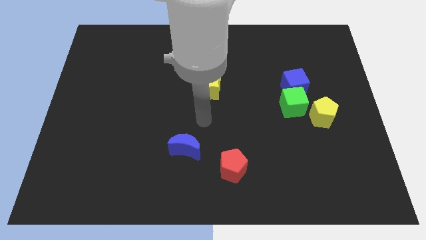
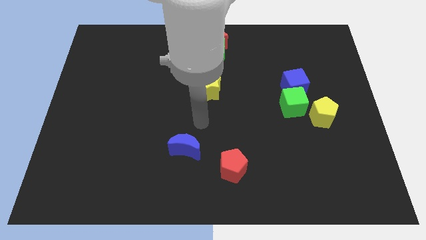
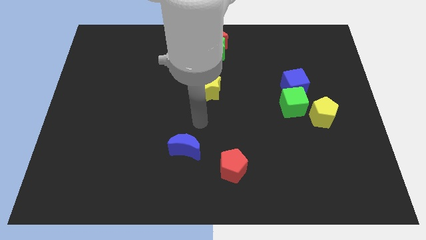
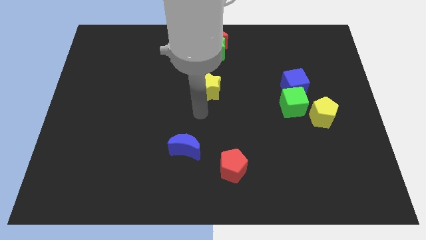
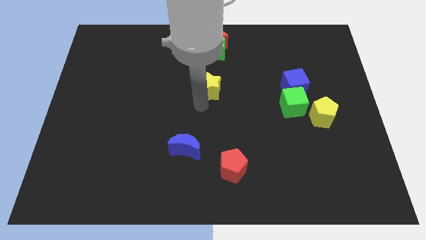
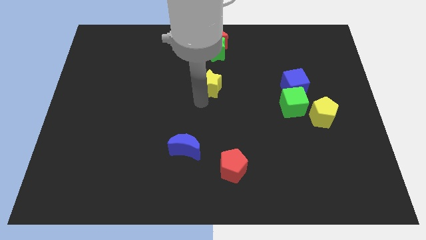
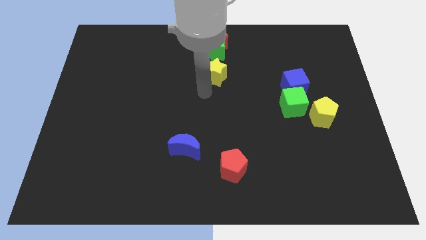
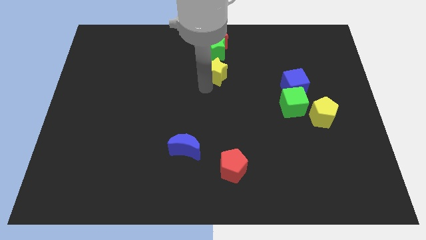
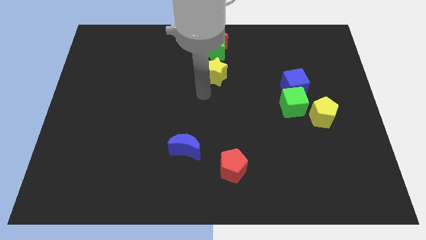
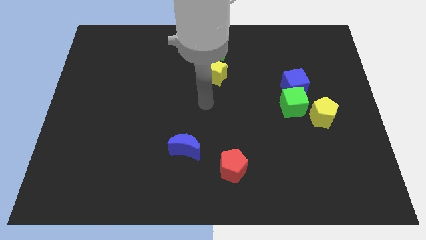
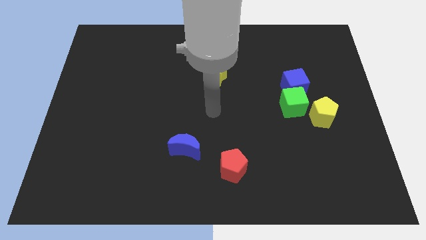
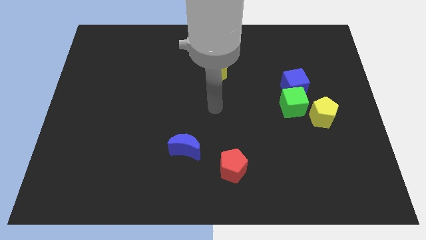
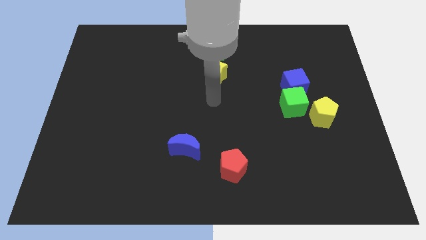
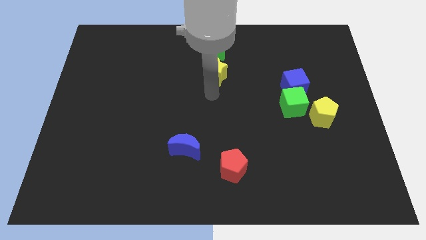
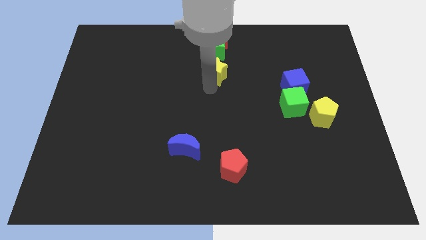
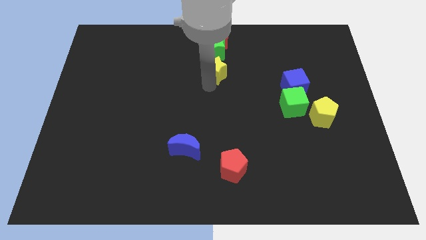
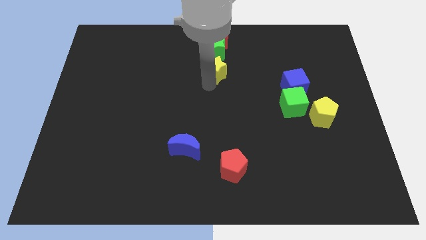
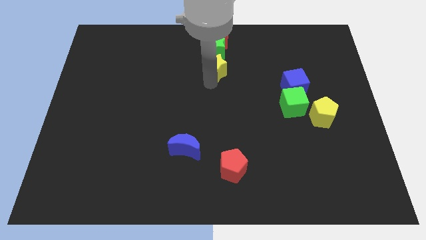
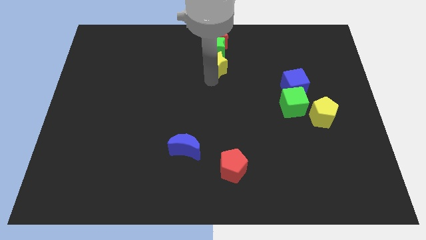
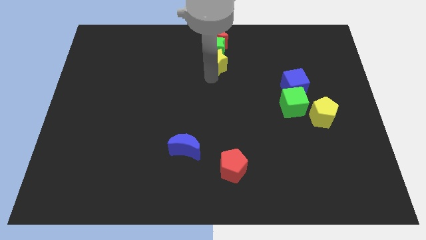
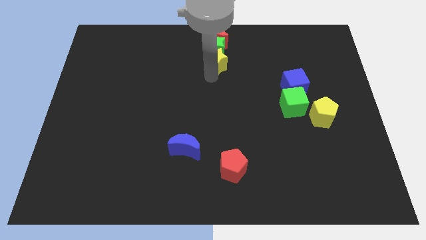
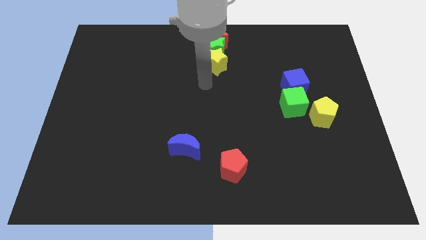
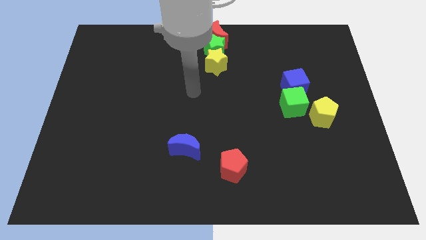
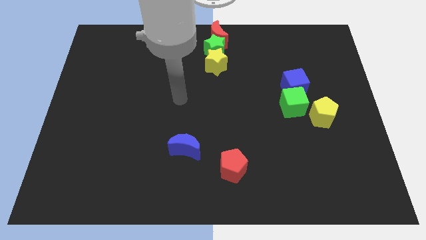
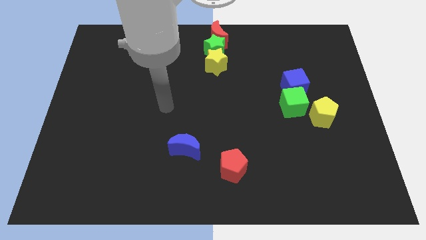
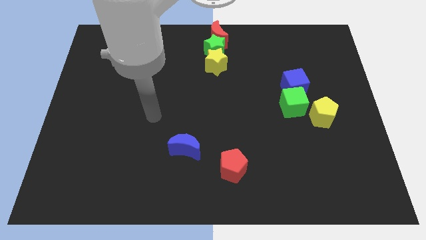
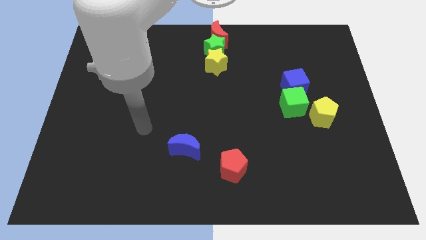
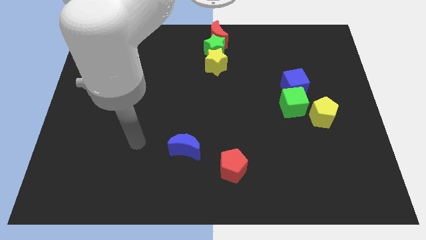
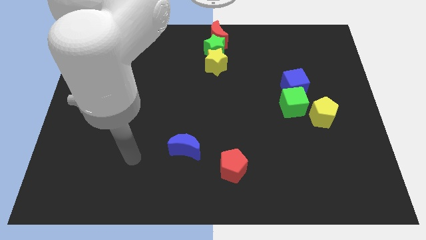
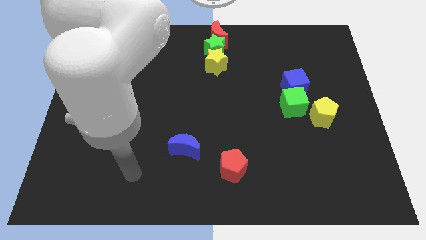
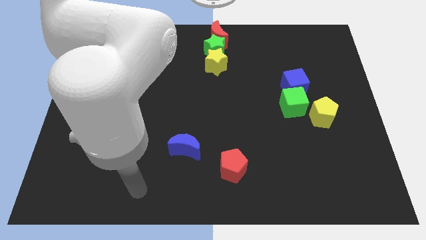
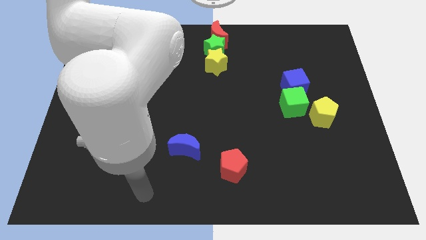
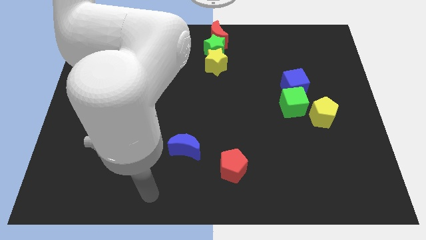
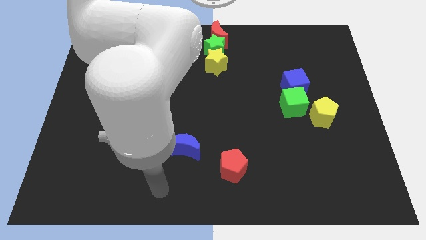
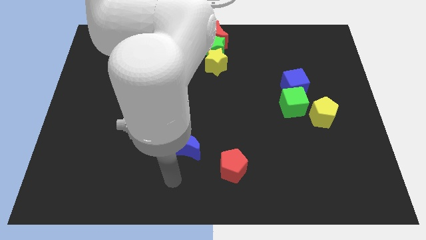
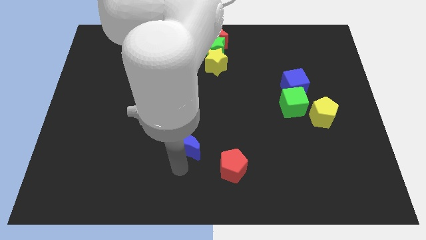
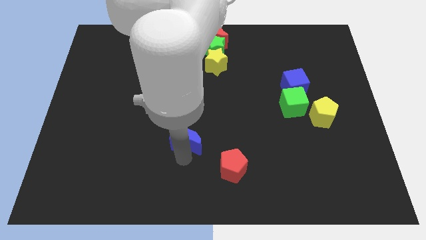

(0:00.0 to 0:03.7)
slide the yellow star into the green star

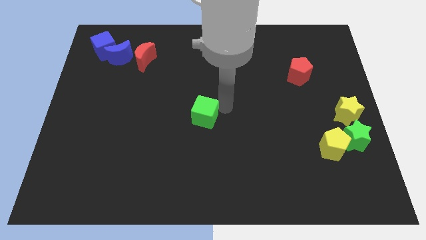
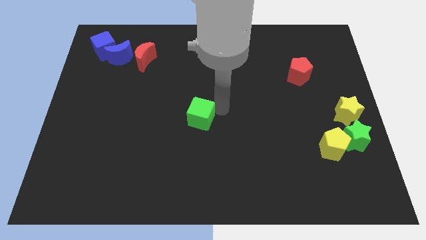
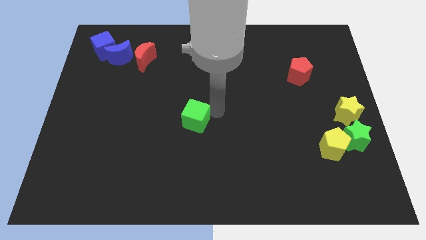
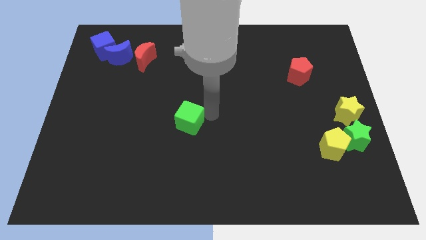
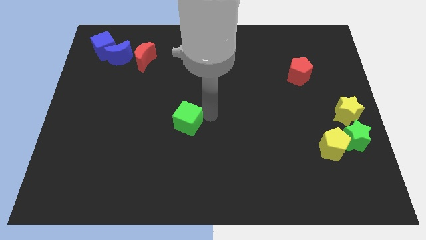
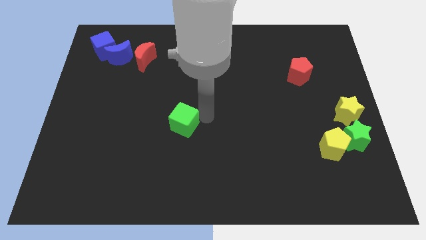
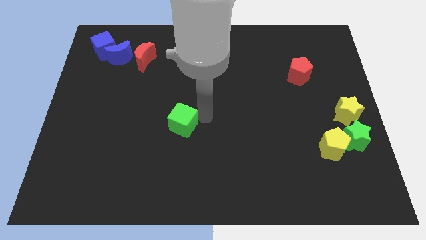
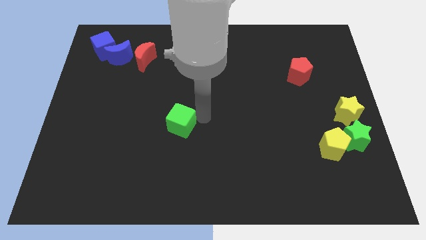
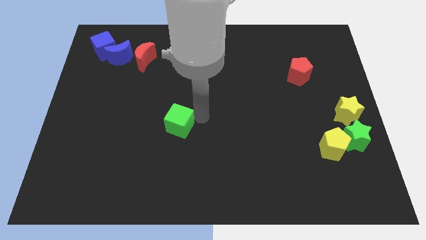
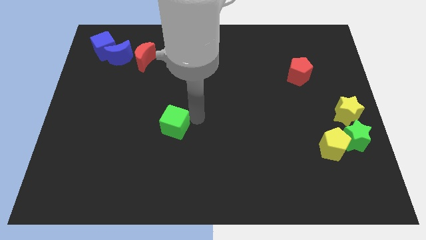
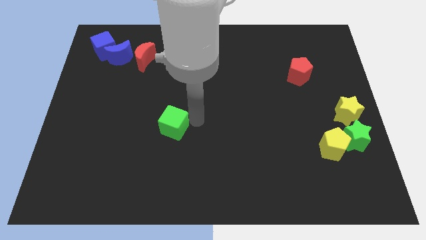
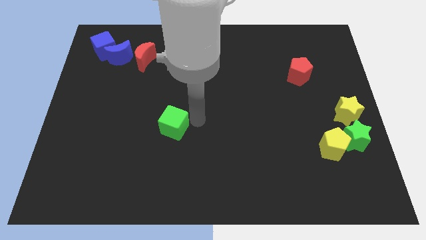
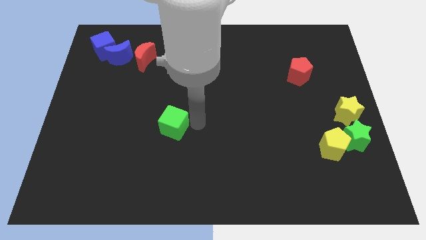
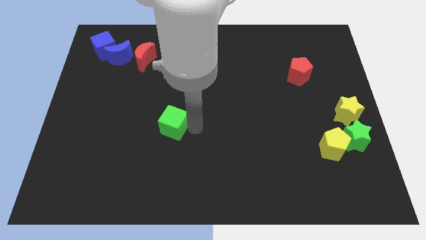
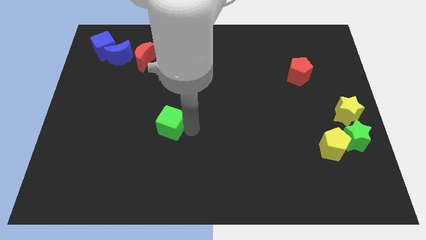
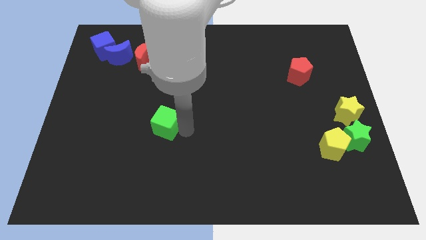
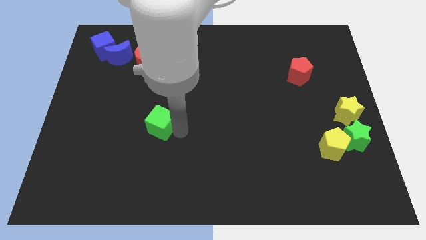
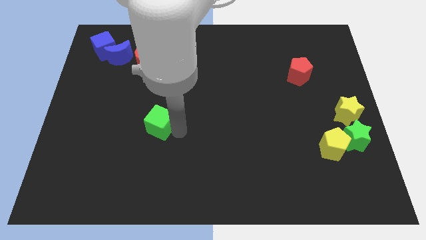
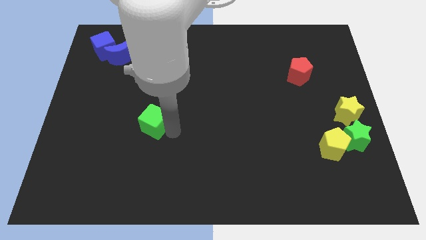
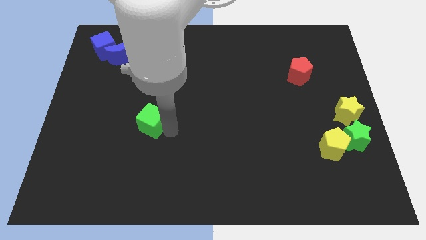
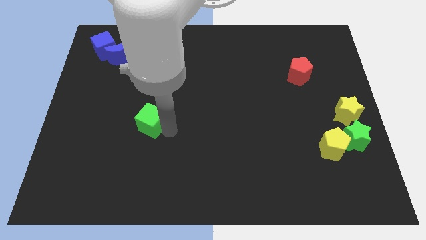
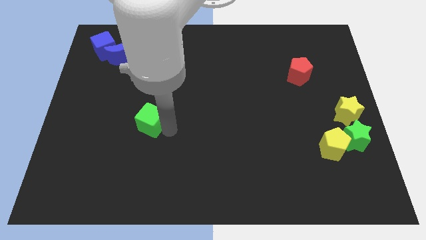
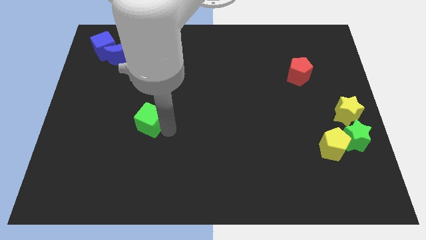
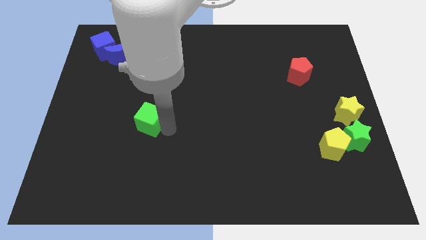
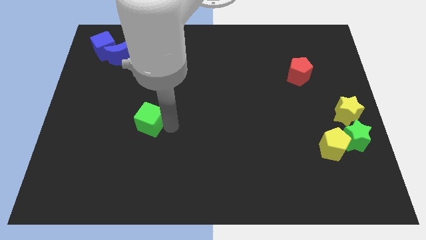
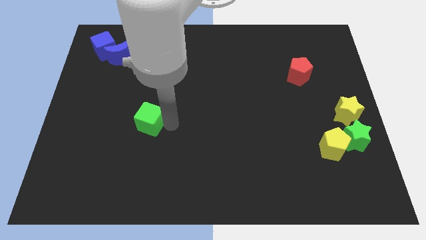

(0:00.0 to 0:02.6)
move the green cube vertically below the red moon

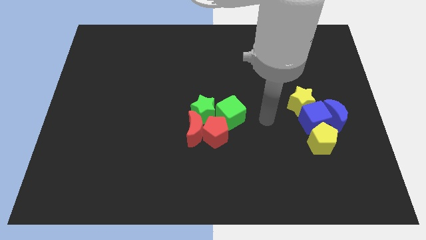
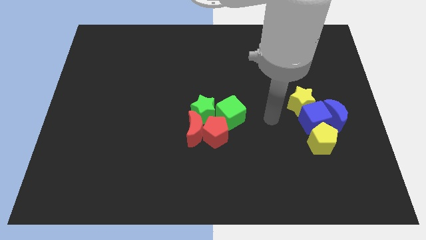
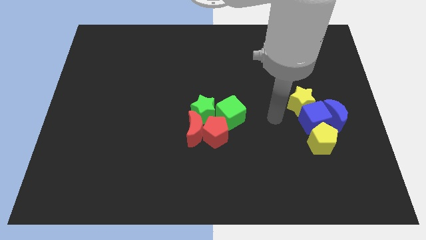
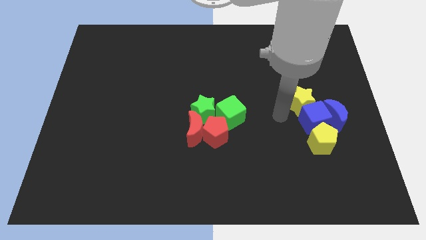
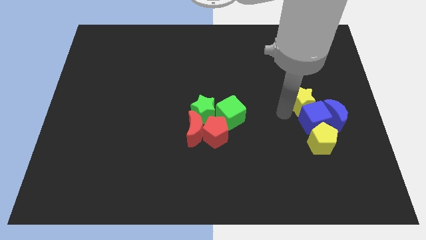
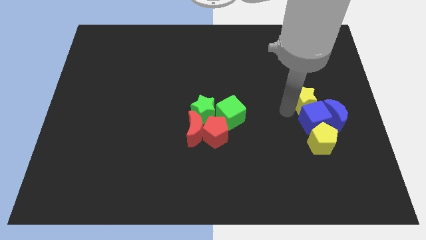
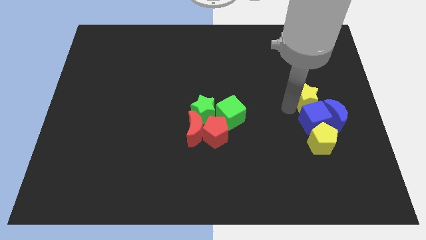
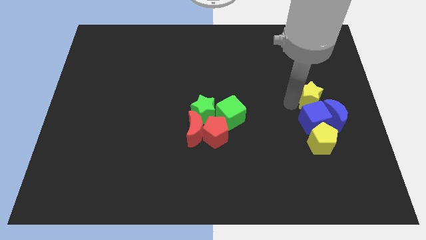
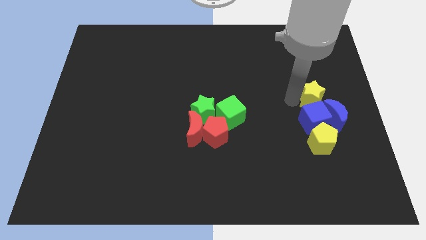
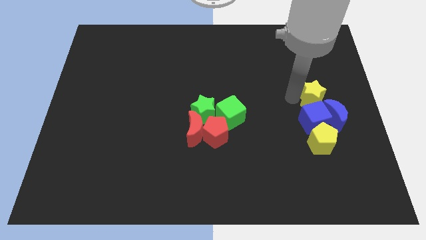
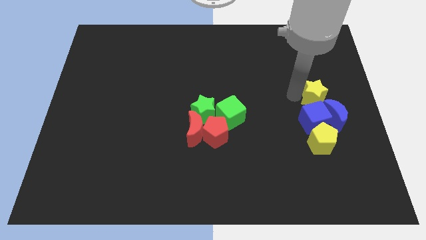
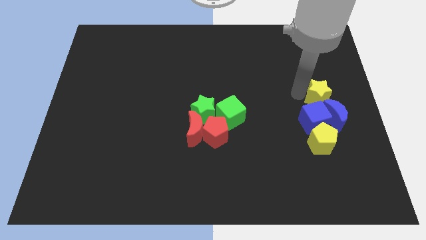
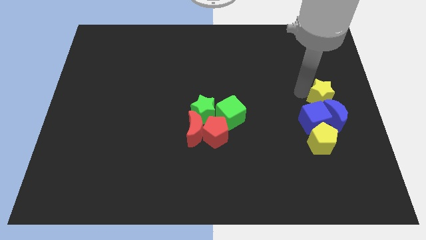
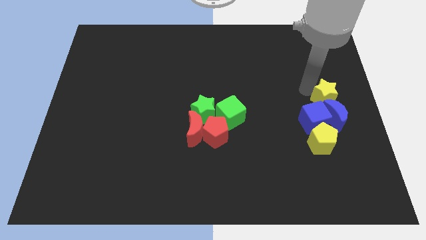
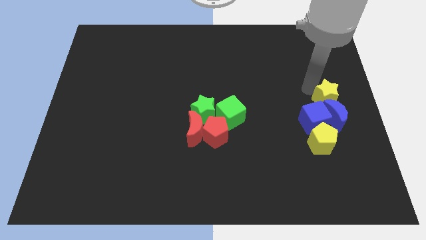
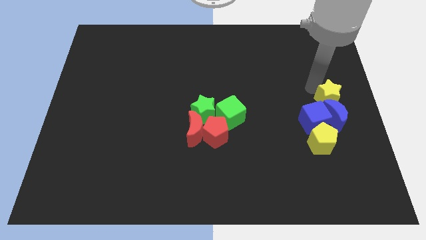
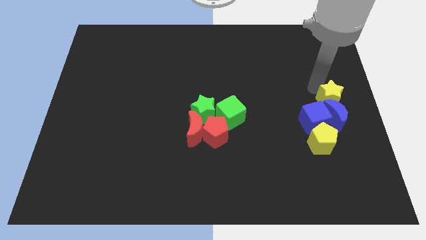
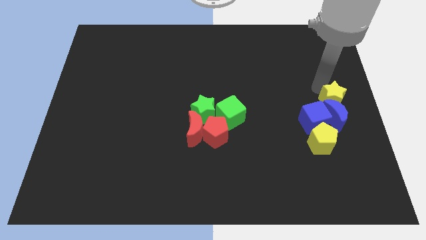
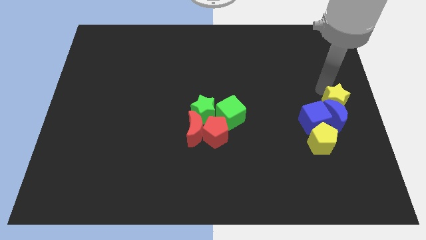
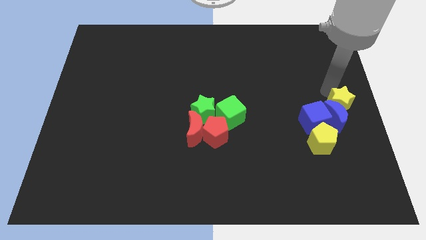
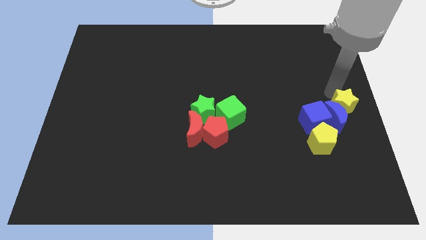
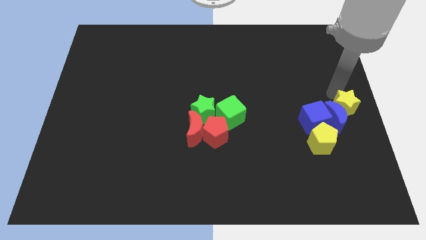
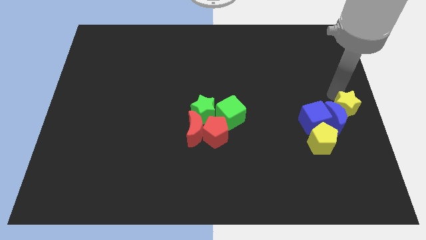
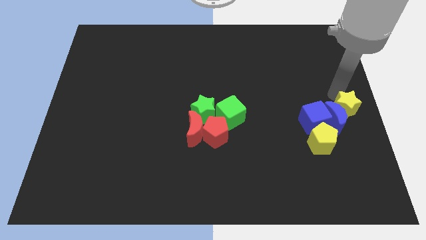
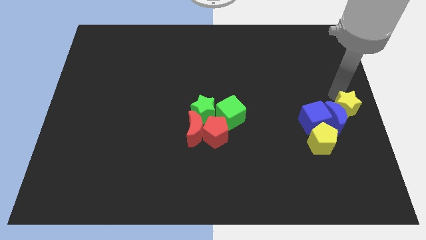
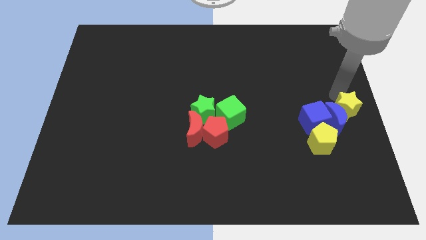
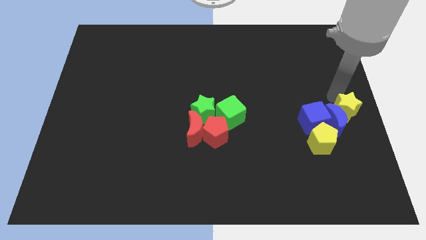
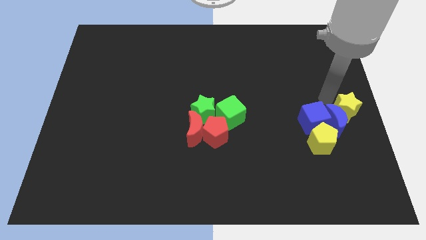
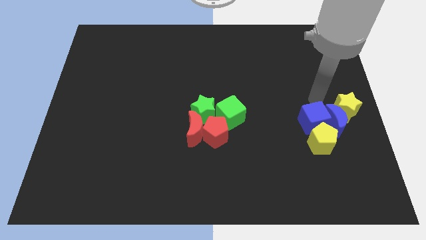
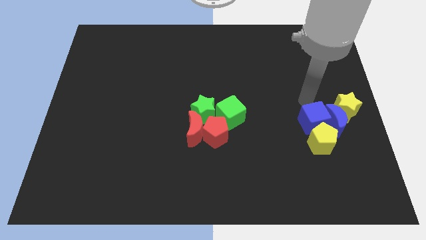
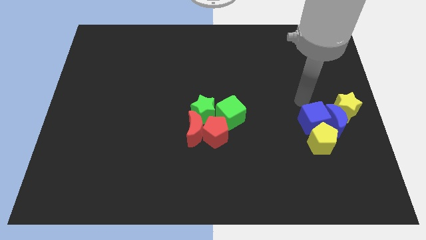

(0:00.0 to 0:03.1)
move the yellow star into the blue crescent
